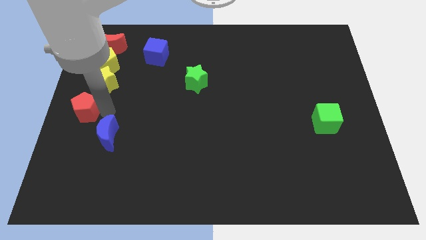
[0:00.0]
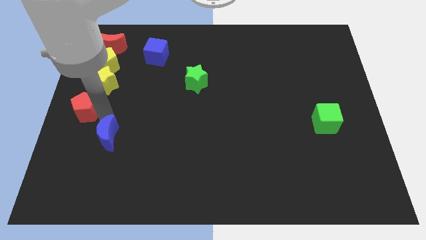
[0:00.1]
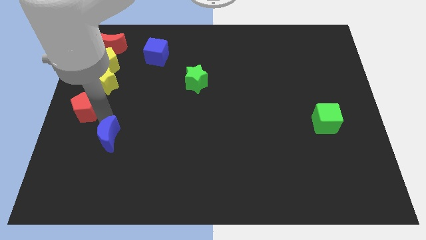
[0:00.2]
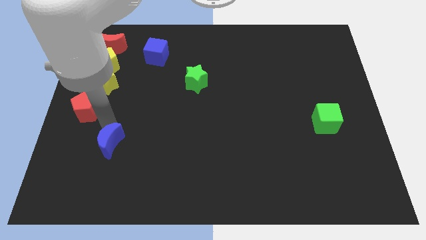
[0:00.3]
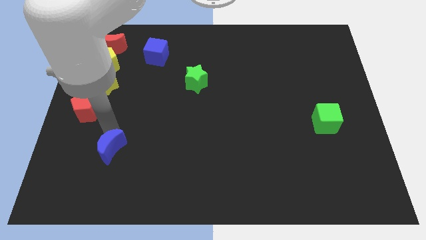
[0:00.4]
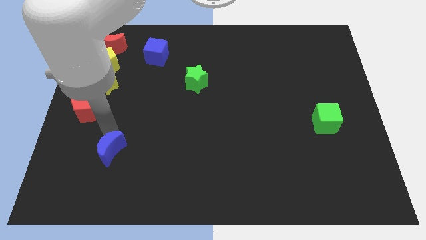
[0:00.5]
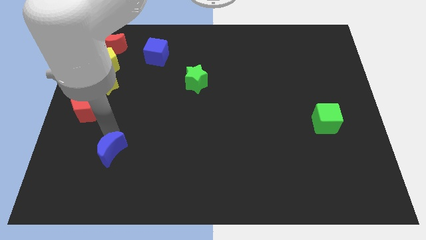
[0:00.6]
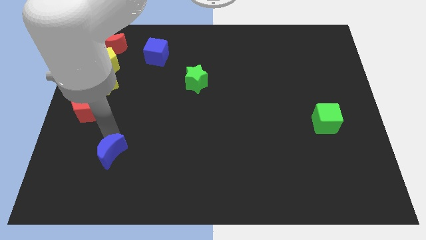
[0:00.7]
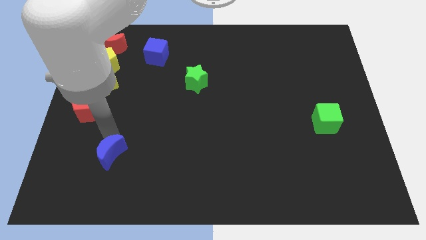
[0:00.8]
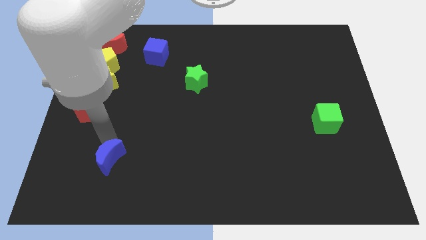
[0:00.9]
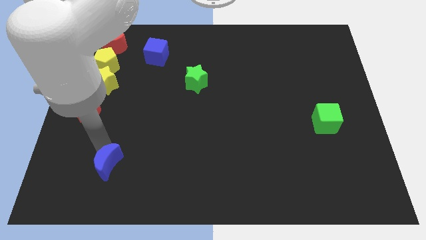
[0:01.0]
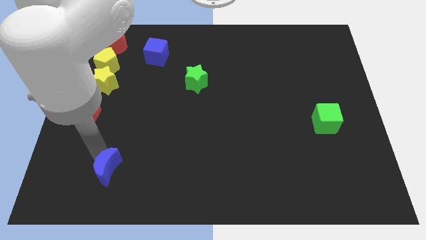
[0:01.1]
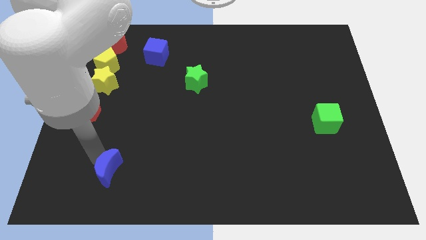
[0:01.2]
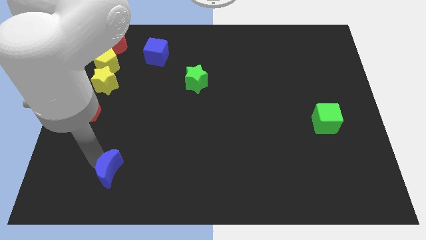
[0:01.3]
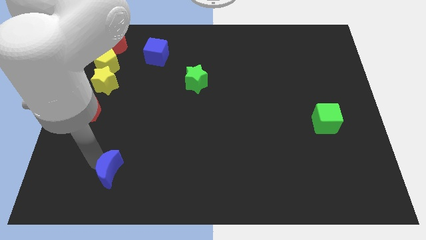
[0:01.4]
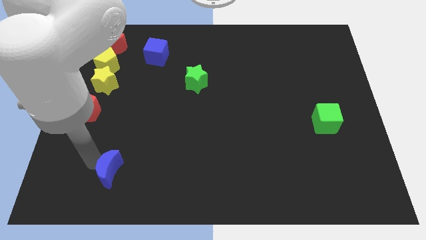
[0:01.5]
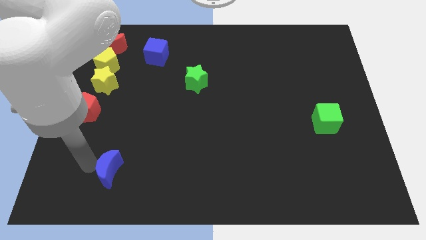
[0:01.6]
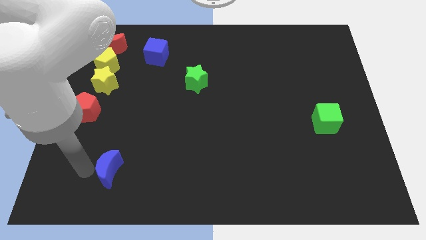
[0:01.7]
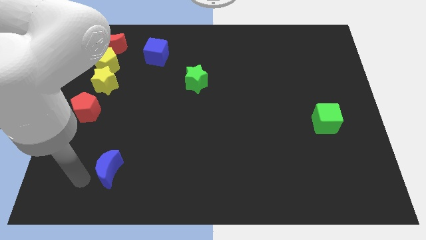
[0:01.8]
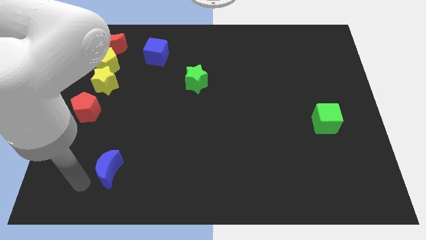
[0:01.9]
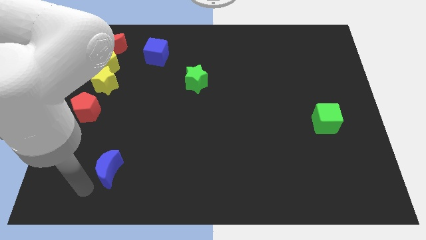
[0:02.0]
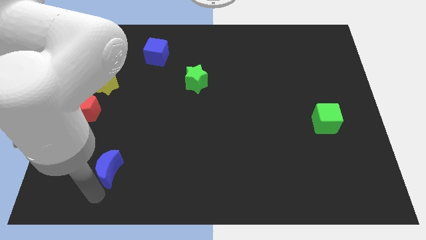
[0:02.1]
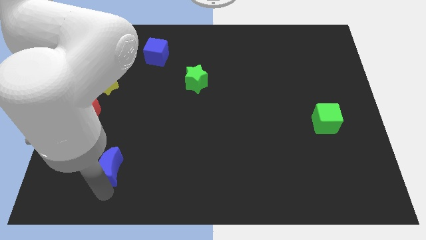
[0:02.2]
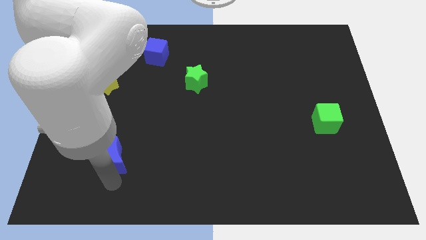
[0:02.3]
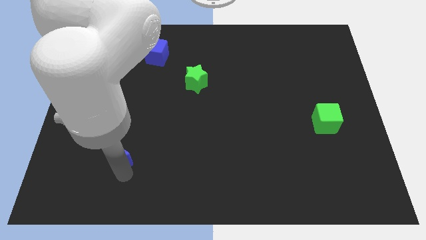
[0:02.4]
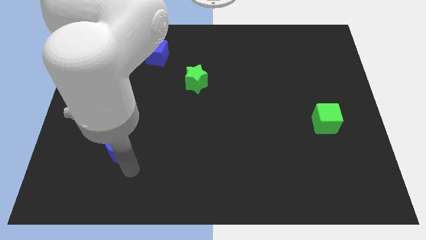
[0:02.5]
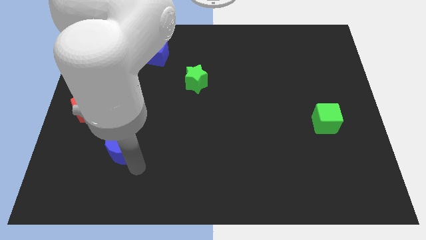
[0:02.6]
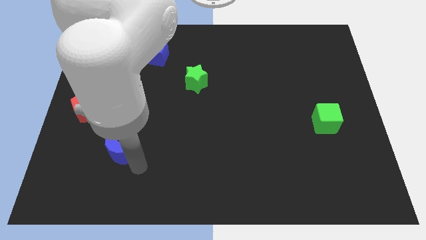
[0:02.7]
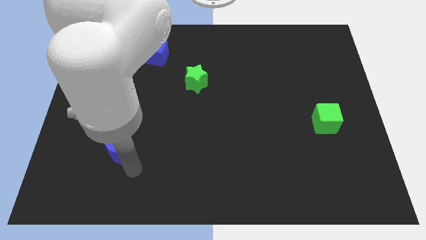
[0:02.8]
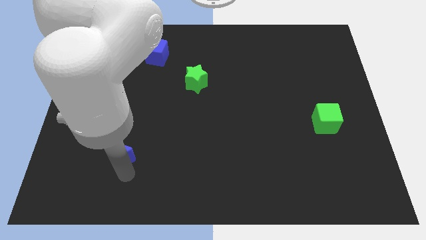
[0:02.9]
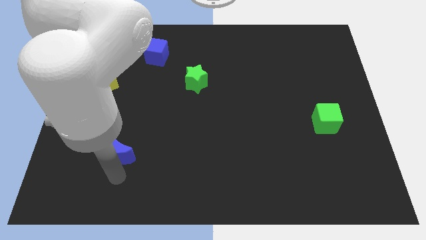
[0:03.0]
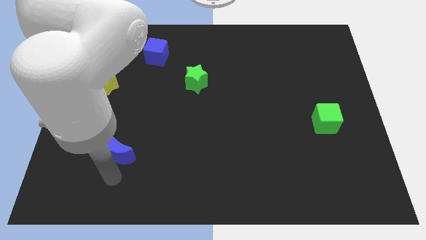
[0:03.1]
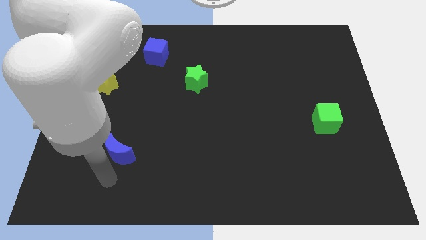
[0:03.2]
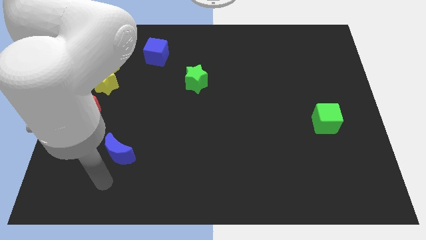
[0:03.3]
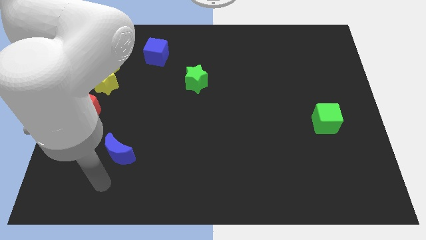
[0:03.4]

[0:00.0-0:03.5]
push the blue moon diagonal below red pentagon

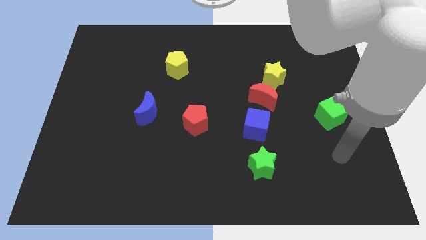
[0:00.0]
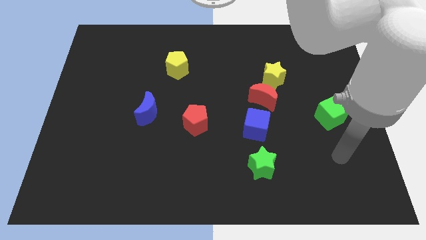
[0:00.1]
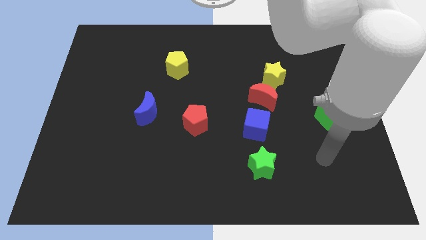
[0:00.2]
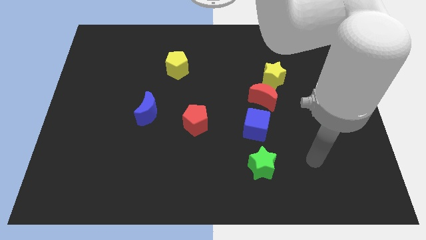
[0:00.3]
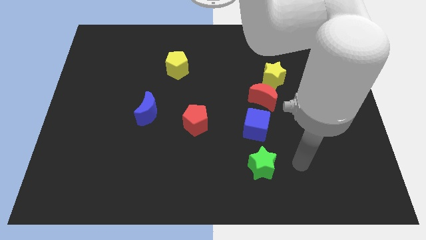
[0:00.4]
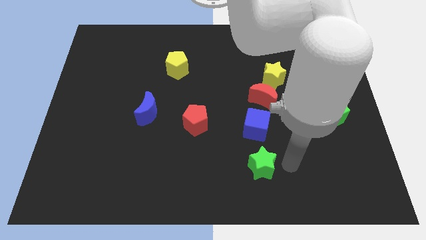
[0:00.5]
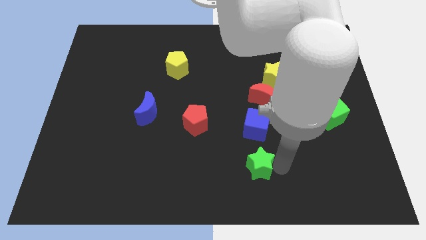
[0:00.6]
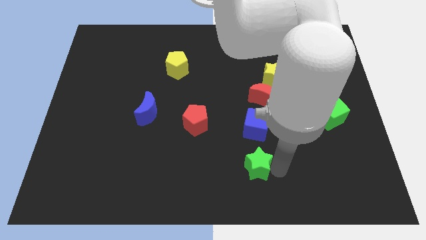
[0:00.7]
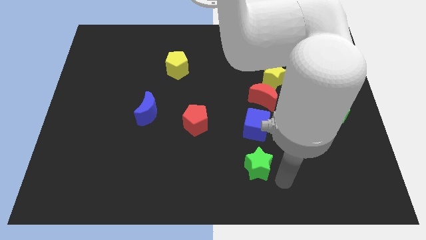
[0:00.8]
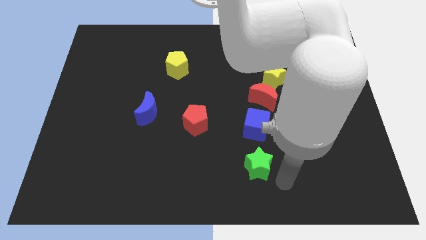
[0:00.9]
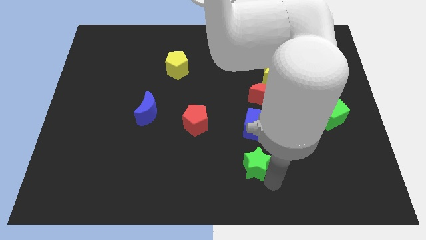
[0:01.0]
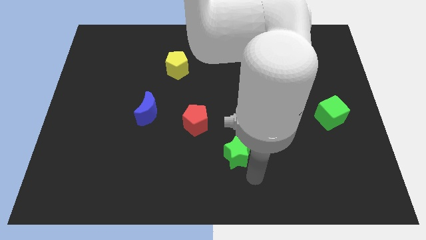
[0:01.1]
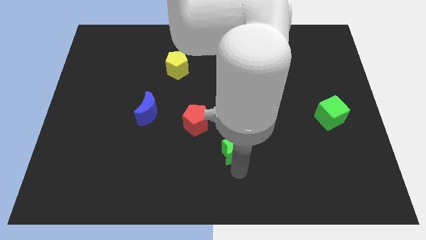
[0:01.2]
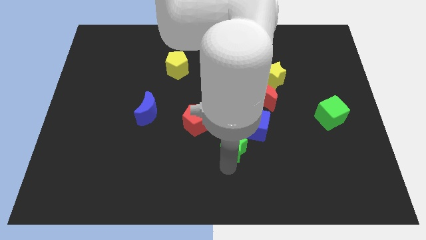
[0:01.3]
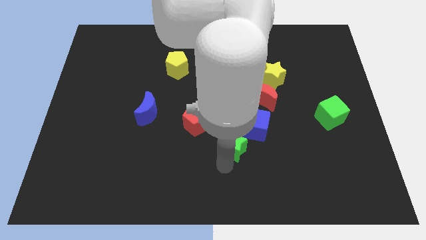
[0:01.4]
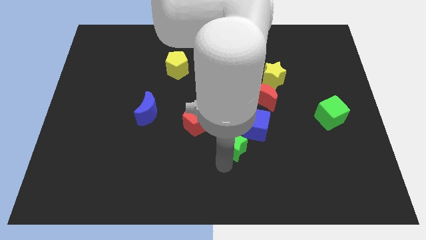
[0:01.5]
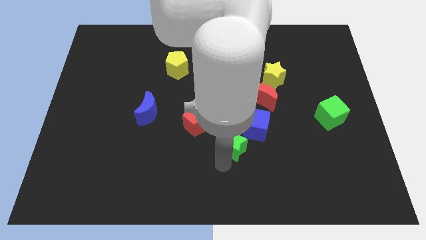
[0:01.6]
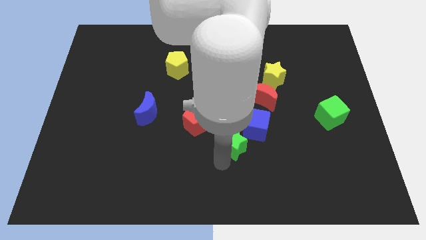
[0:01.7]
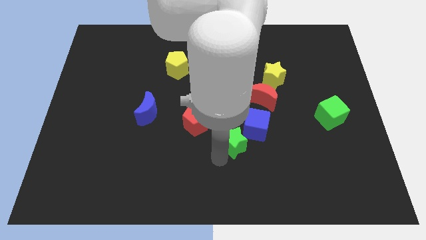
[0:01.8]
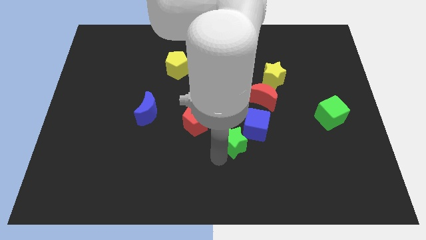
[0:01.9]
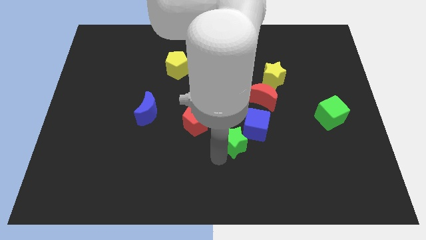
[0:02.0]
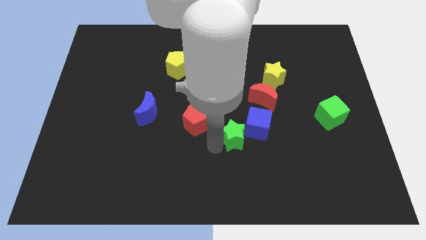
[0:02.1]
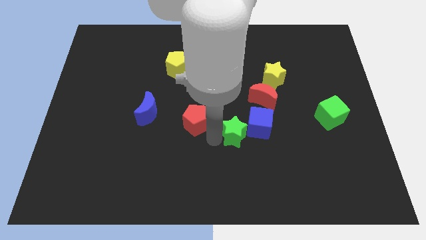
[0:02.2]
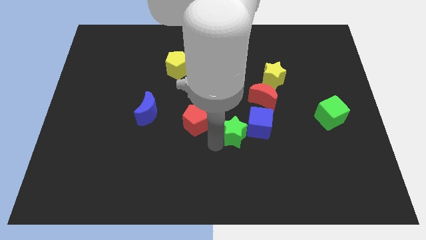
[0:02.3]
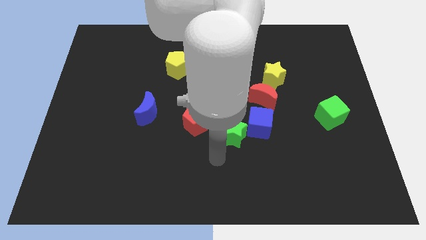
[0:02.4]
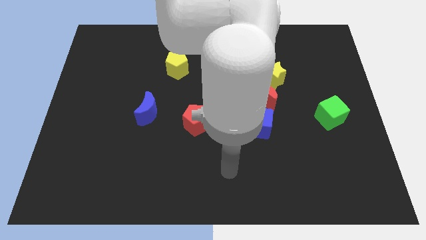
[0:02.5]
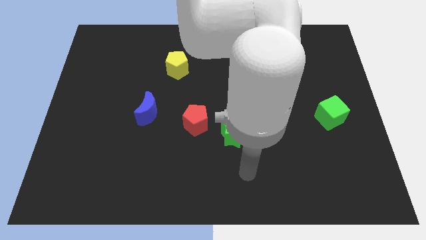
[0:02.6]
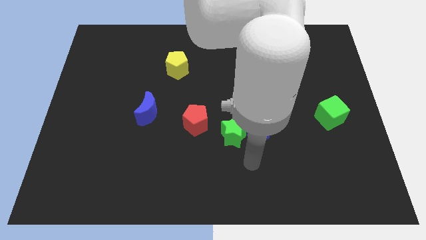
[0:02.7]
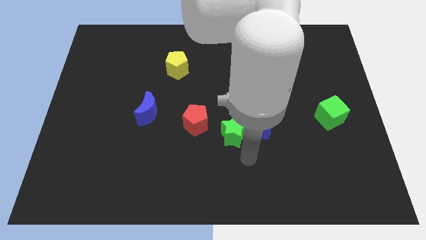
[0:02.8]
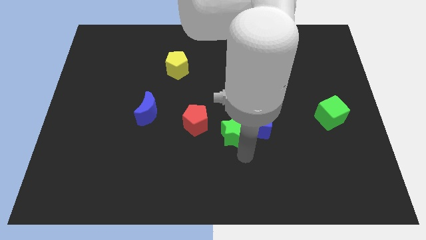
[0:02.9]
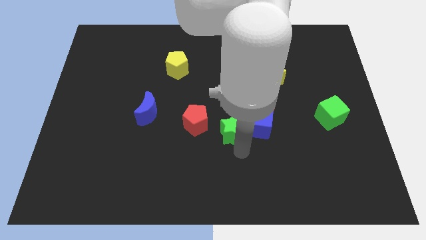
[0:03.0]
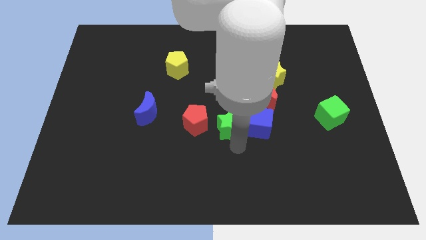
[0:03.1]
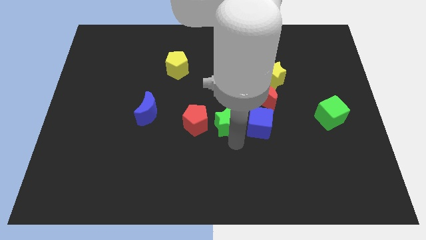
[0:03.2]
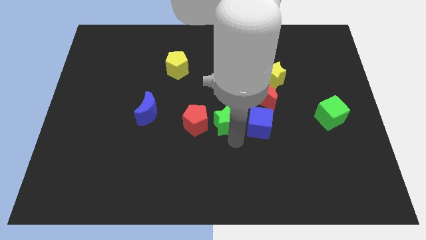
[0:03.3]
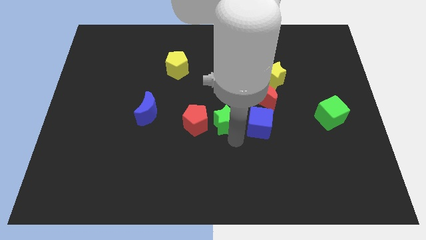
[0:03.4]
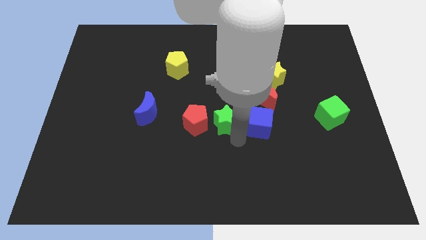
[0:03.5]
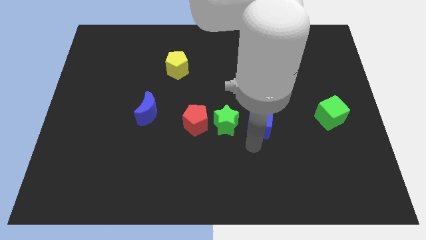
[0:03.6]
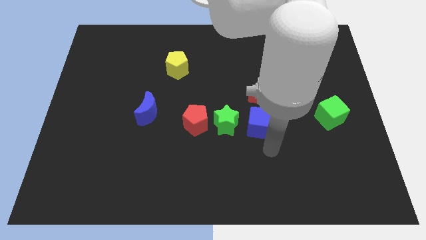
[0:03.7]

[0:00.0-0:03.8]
place the green star in between red pentagon and blue cube

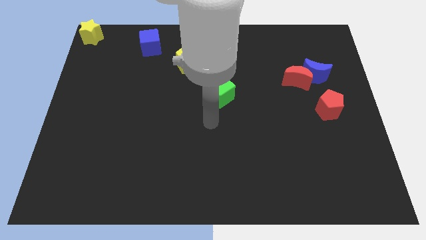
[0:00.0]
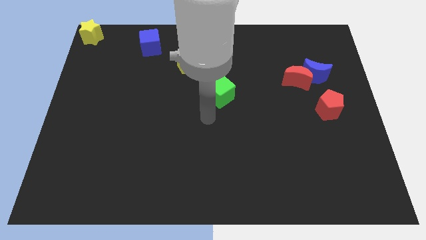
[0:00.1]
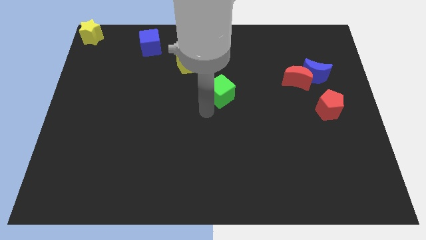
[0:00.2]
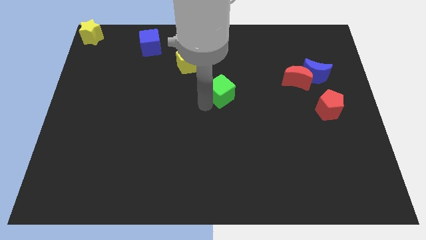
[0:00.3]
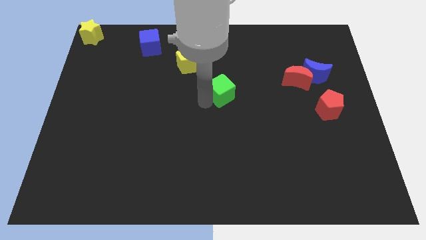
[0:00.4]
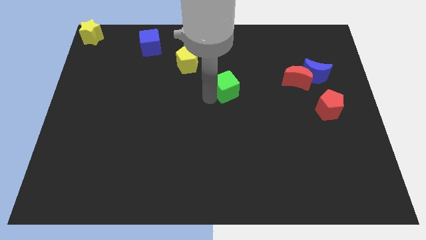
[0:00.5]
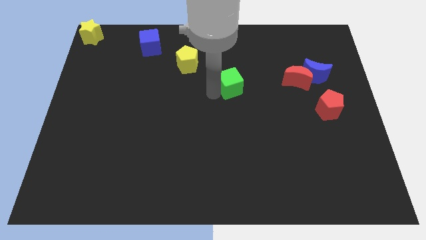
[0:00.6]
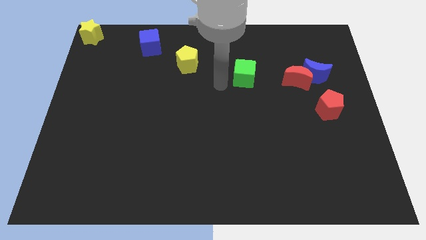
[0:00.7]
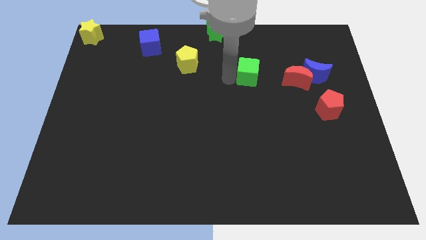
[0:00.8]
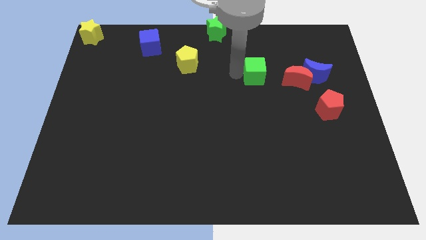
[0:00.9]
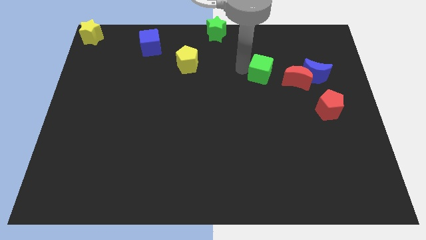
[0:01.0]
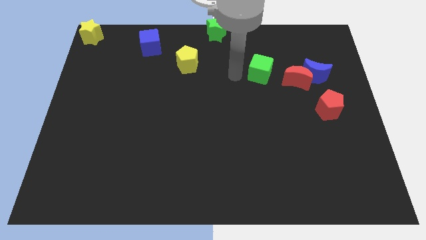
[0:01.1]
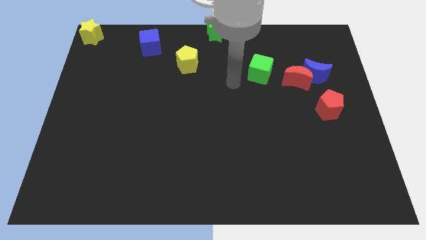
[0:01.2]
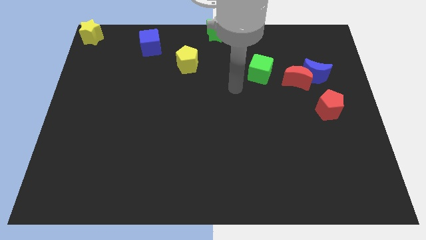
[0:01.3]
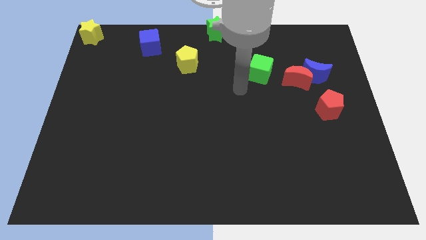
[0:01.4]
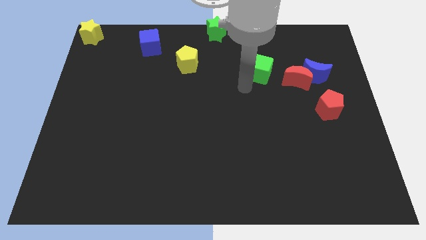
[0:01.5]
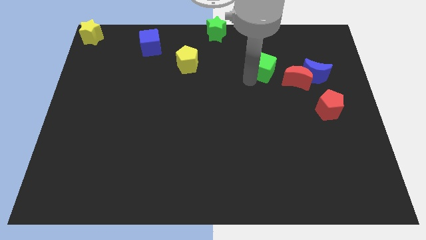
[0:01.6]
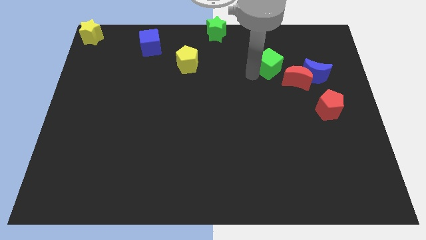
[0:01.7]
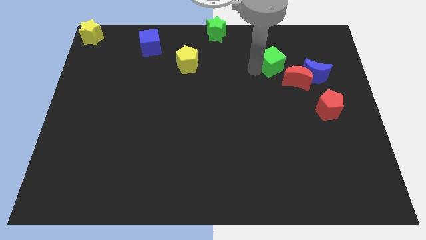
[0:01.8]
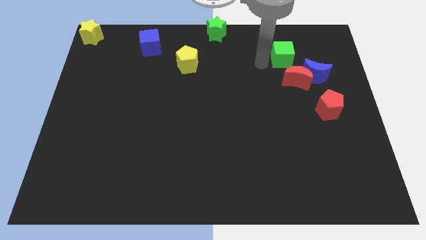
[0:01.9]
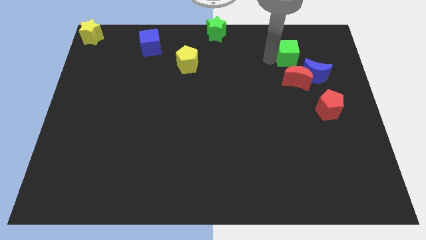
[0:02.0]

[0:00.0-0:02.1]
move the green cube to the top of the red crescent
